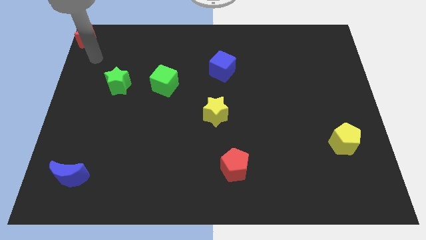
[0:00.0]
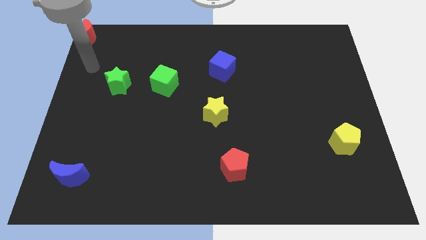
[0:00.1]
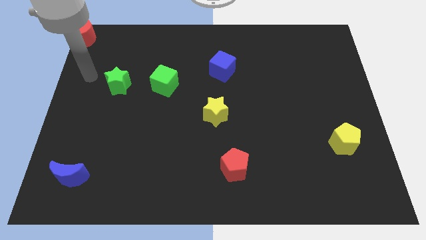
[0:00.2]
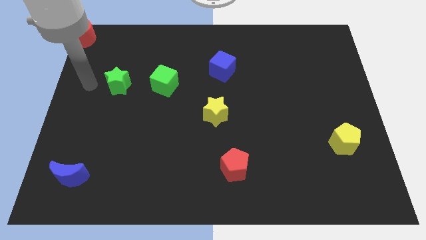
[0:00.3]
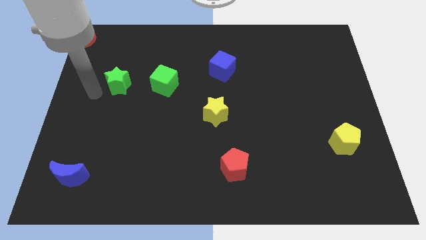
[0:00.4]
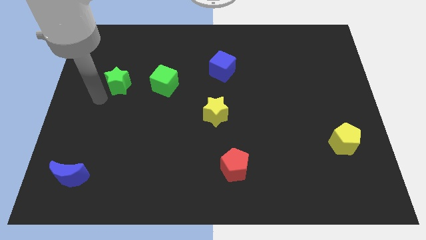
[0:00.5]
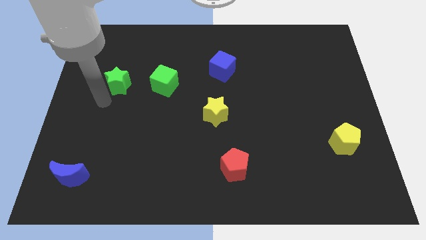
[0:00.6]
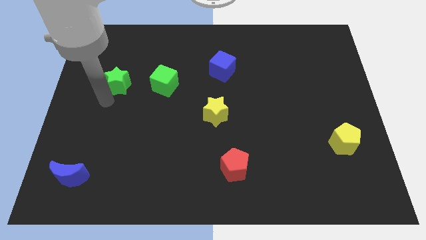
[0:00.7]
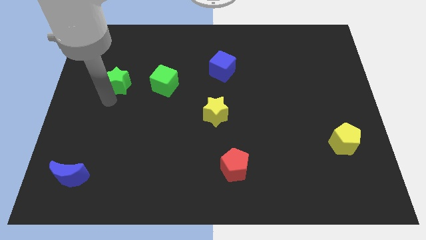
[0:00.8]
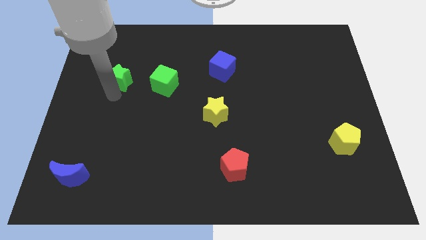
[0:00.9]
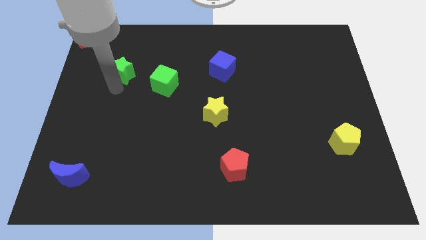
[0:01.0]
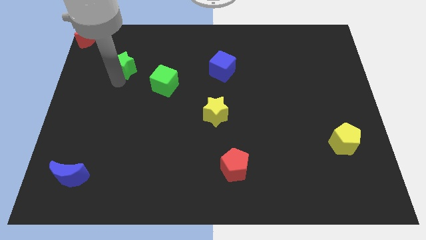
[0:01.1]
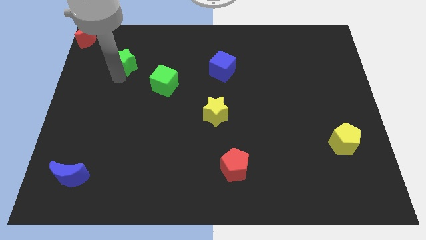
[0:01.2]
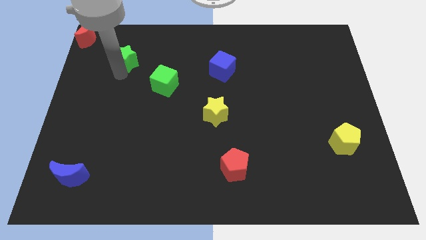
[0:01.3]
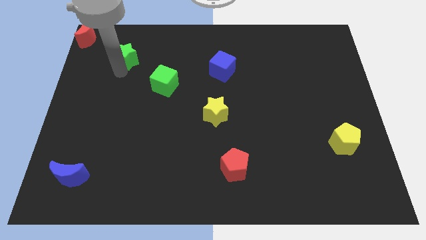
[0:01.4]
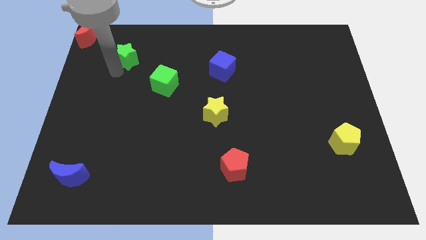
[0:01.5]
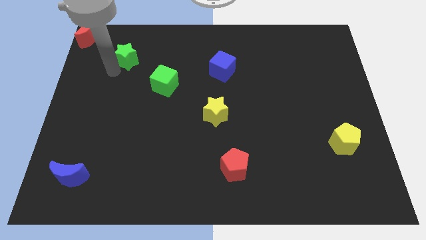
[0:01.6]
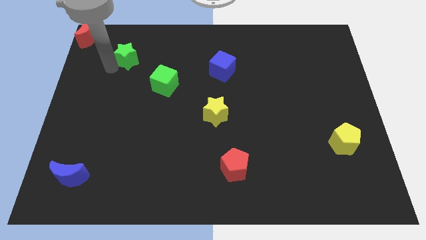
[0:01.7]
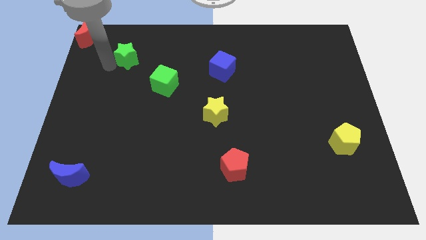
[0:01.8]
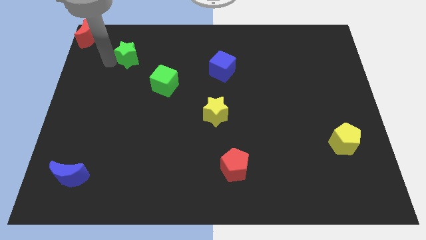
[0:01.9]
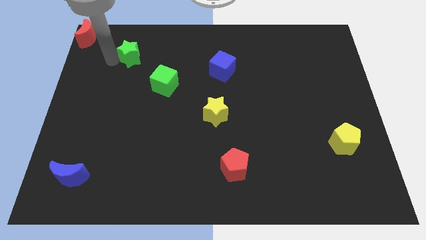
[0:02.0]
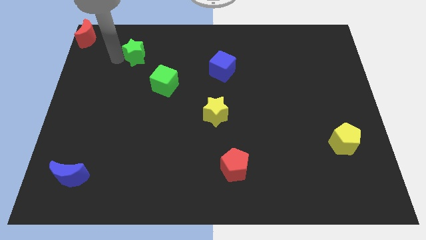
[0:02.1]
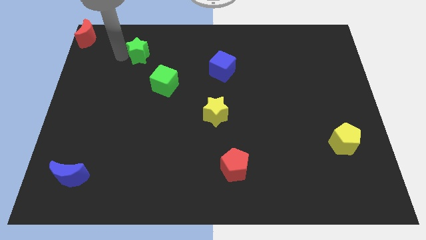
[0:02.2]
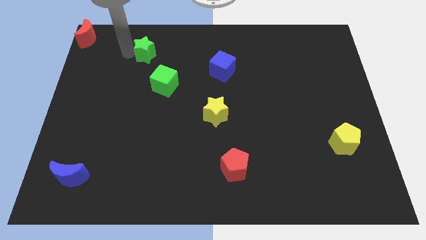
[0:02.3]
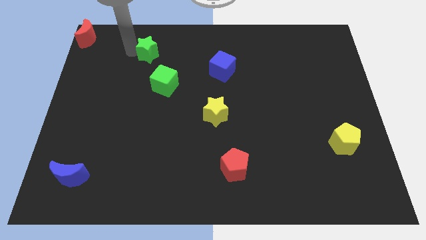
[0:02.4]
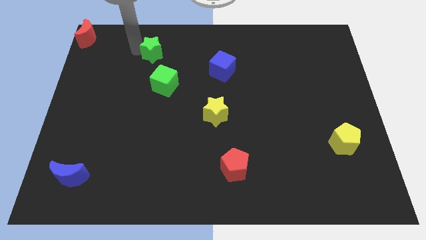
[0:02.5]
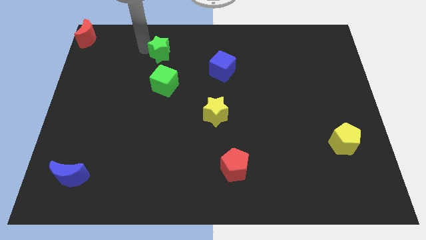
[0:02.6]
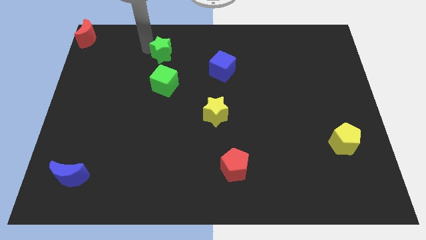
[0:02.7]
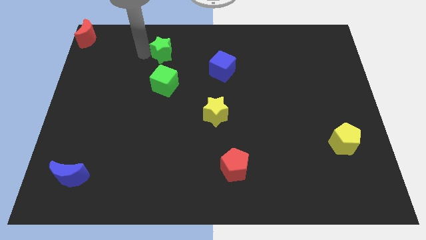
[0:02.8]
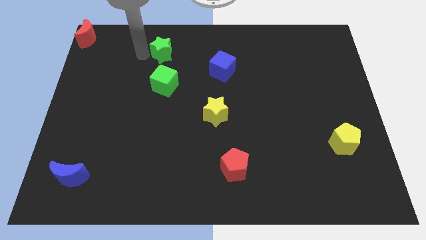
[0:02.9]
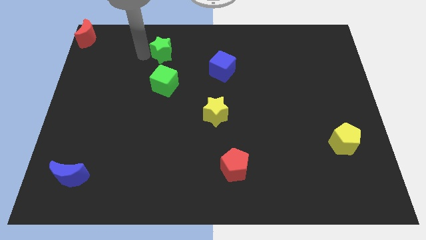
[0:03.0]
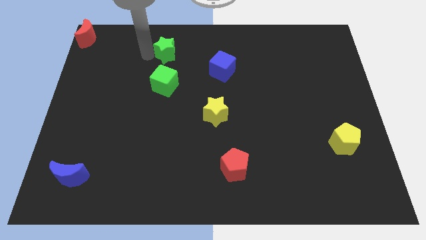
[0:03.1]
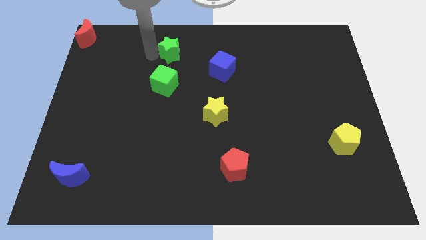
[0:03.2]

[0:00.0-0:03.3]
place green star above green cube

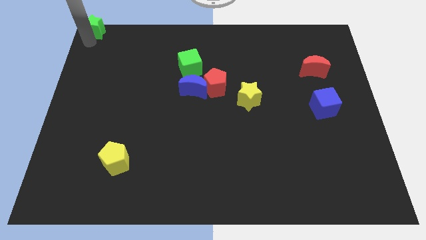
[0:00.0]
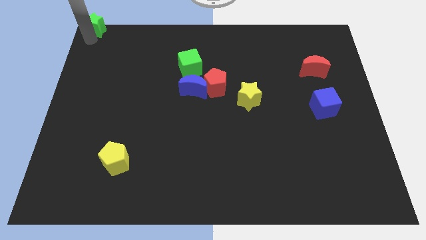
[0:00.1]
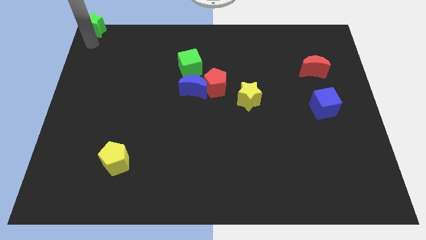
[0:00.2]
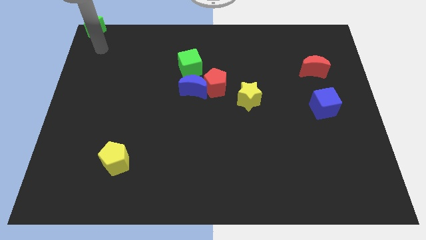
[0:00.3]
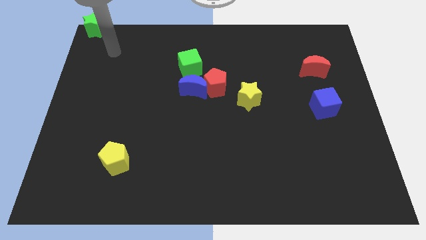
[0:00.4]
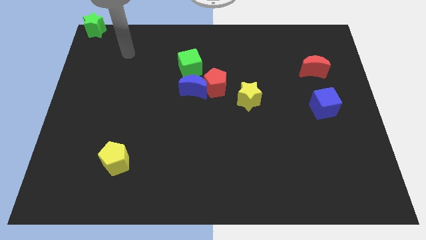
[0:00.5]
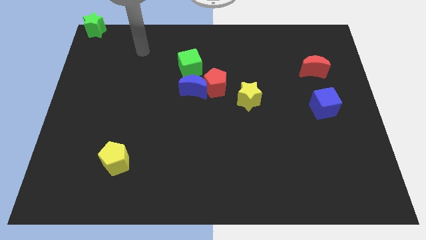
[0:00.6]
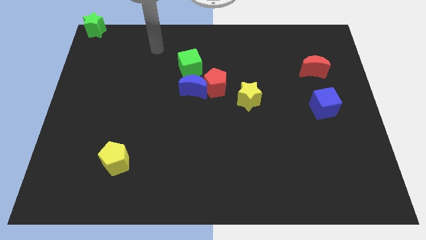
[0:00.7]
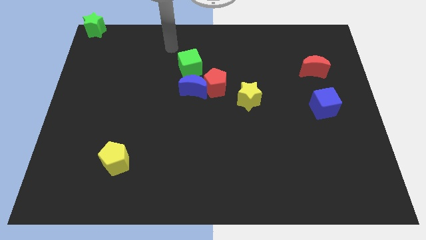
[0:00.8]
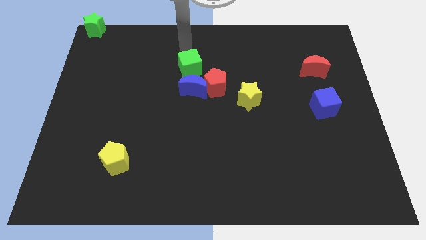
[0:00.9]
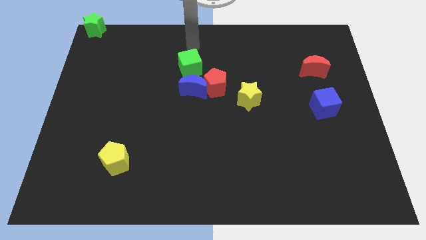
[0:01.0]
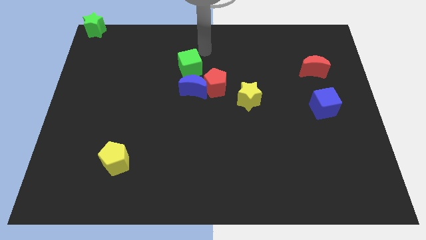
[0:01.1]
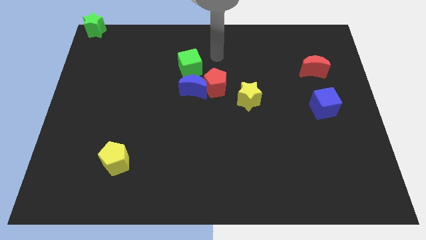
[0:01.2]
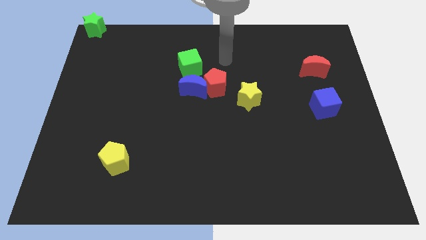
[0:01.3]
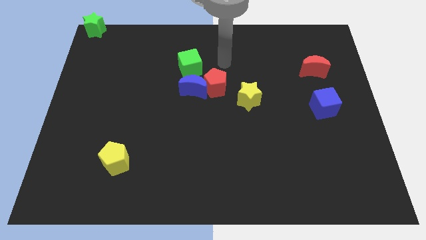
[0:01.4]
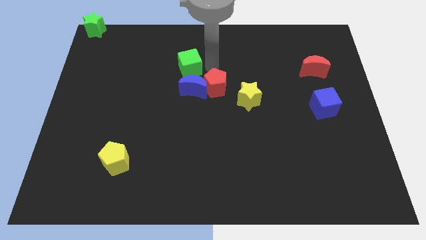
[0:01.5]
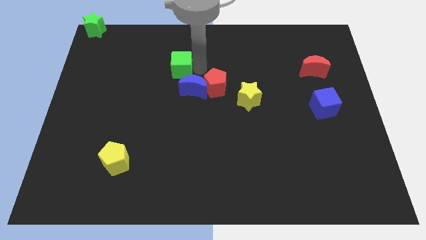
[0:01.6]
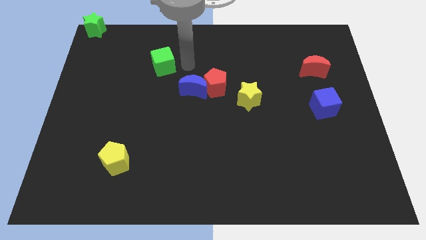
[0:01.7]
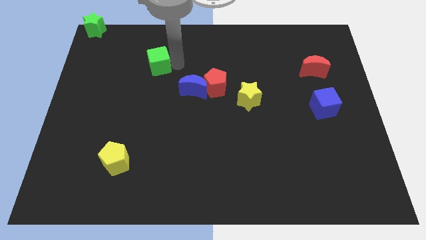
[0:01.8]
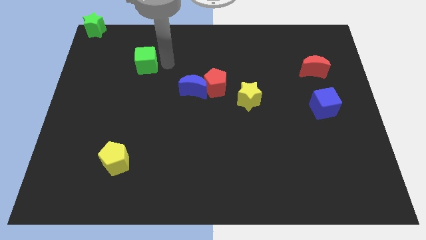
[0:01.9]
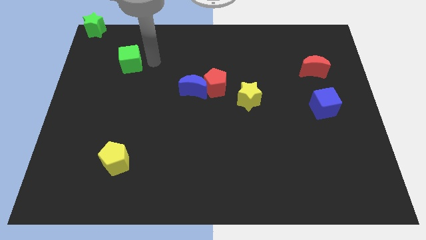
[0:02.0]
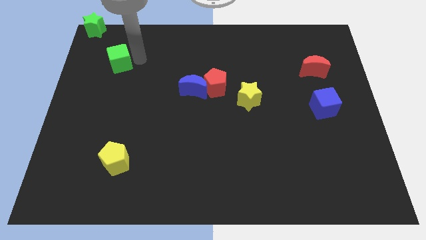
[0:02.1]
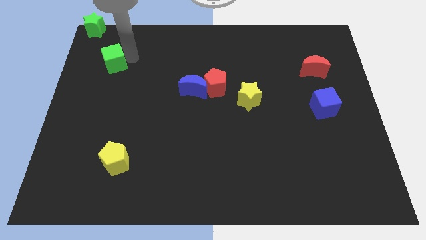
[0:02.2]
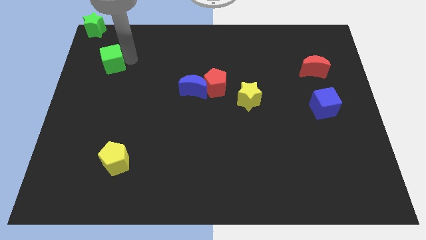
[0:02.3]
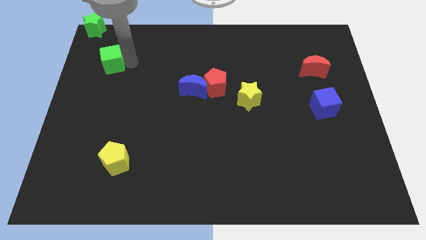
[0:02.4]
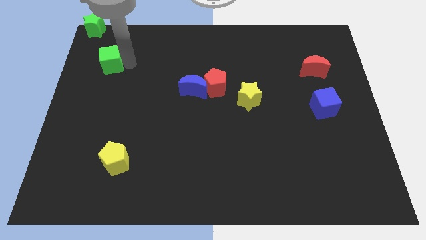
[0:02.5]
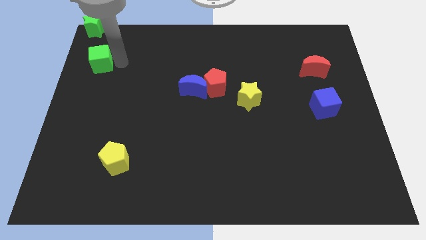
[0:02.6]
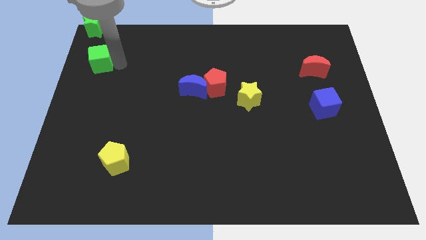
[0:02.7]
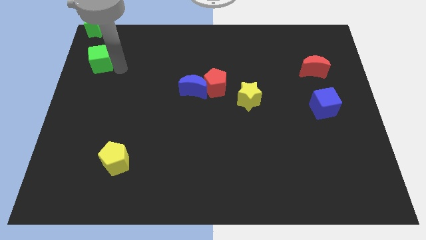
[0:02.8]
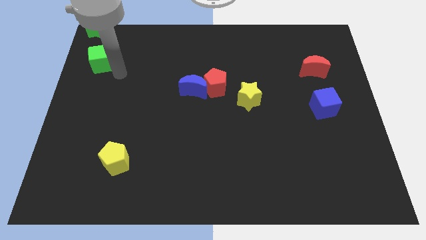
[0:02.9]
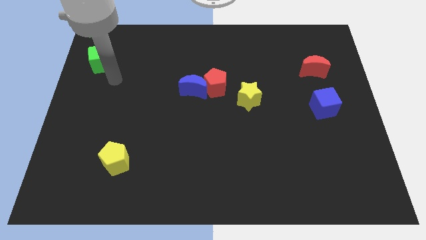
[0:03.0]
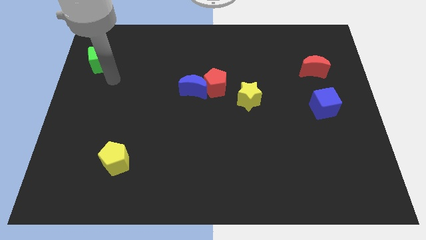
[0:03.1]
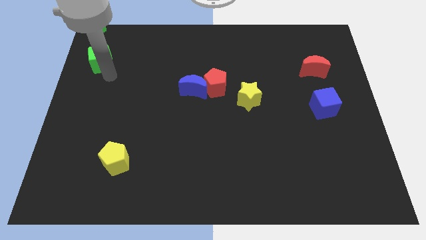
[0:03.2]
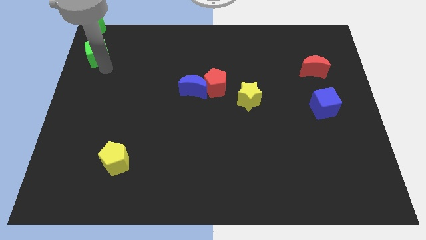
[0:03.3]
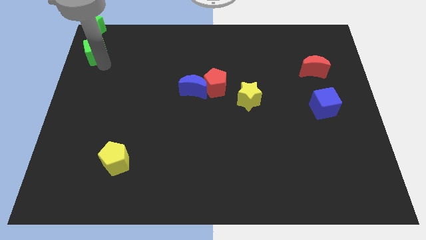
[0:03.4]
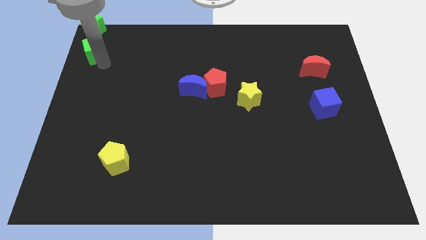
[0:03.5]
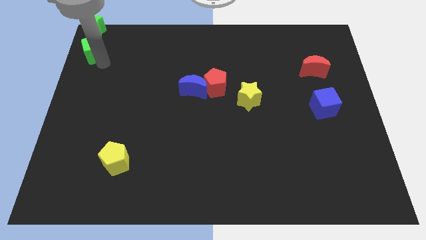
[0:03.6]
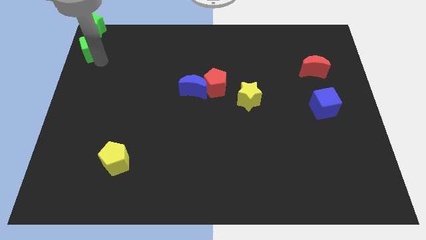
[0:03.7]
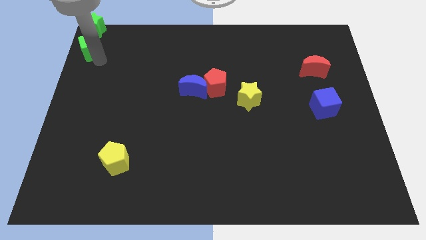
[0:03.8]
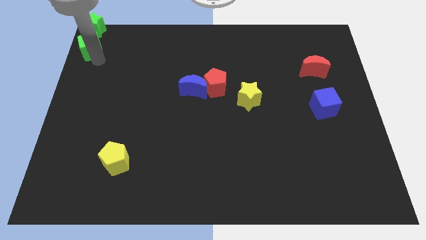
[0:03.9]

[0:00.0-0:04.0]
place the green cube down to the green star

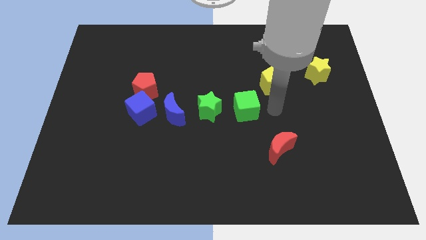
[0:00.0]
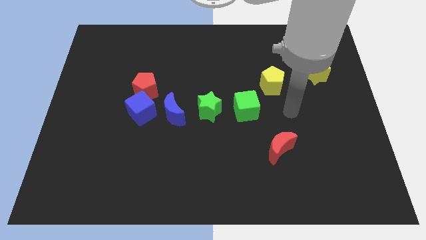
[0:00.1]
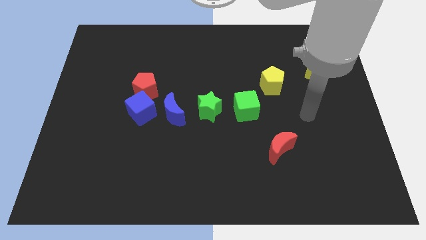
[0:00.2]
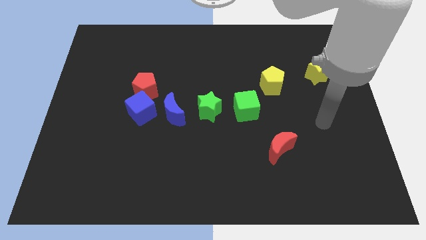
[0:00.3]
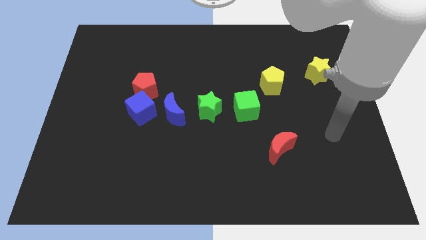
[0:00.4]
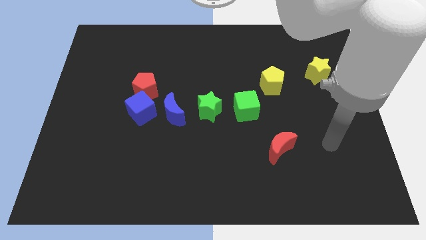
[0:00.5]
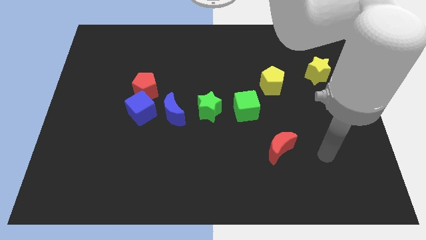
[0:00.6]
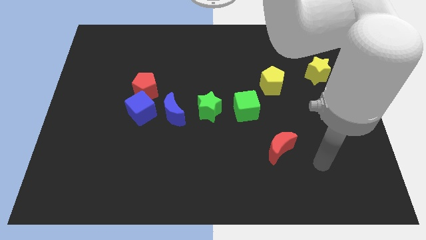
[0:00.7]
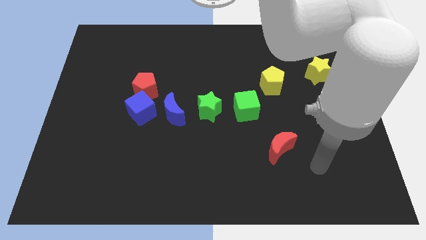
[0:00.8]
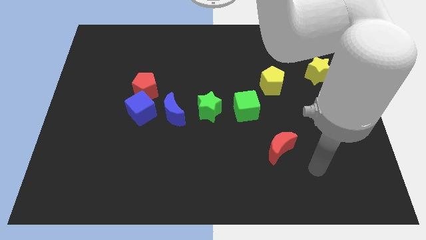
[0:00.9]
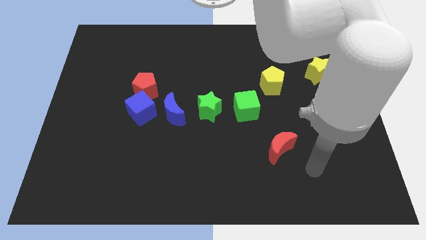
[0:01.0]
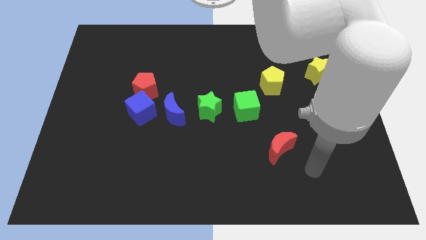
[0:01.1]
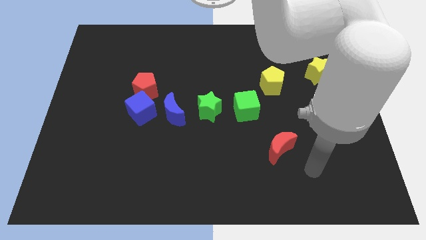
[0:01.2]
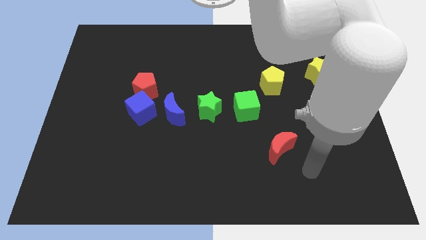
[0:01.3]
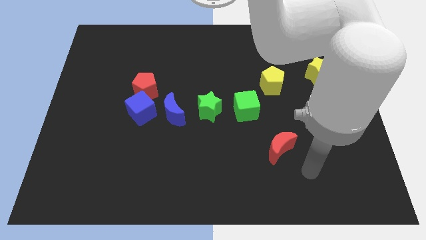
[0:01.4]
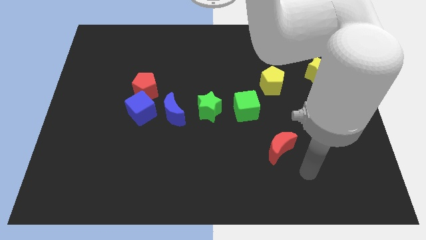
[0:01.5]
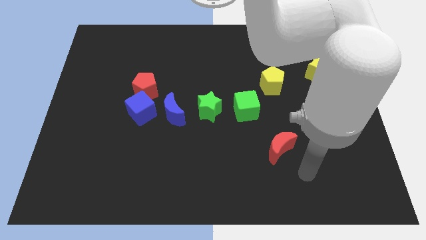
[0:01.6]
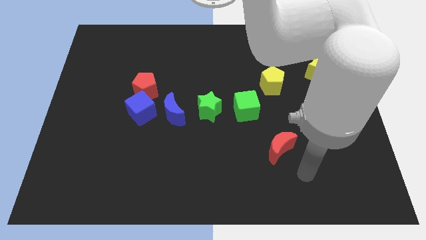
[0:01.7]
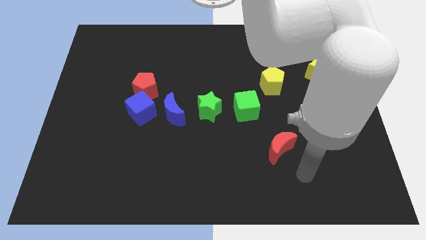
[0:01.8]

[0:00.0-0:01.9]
move your arm away from green cube
